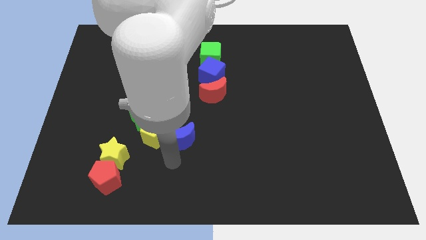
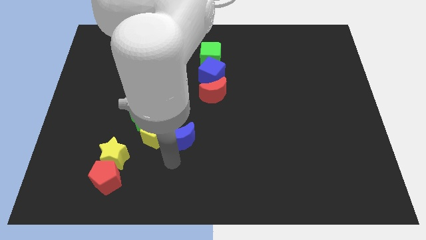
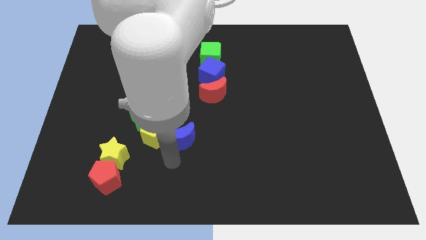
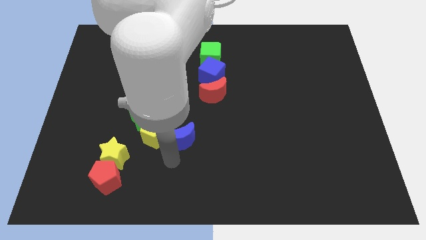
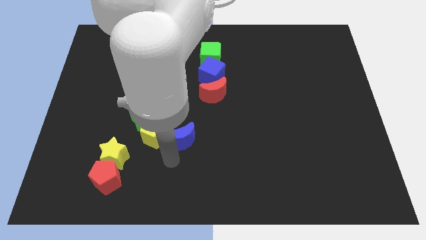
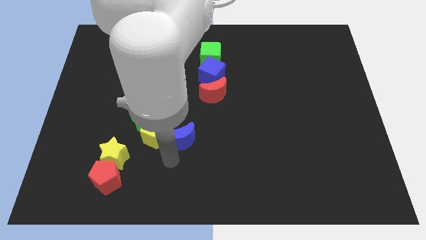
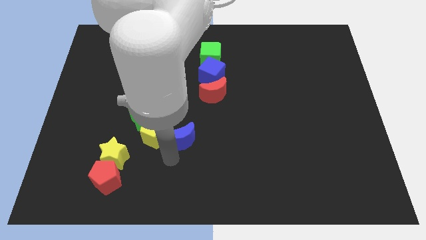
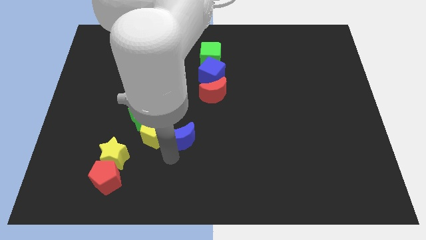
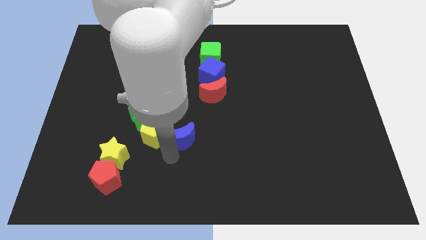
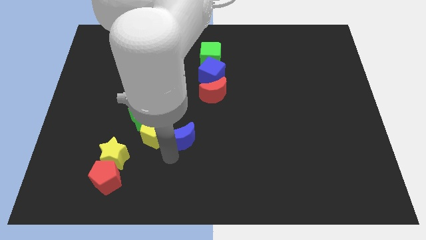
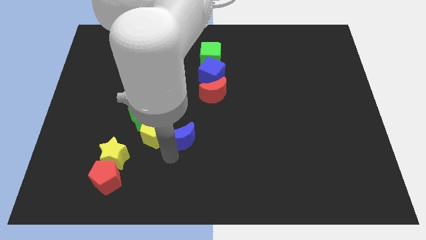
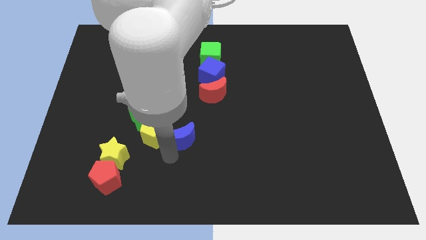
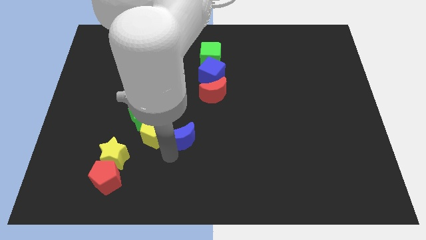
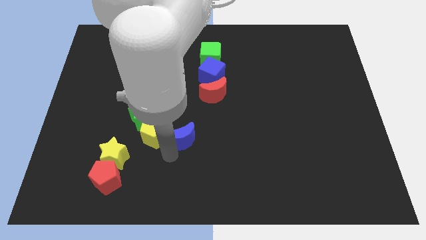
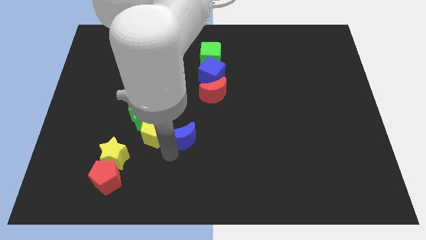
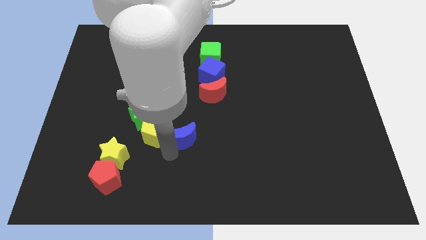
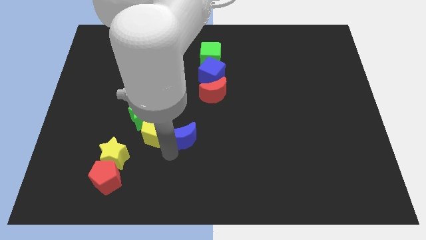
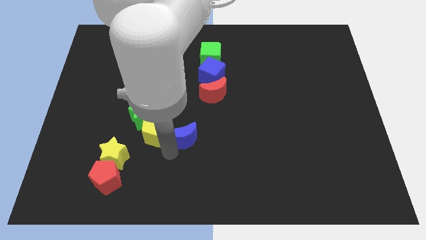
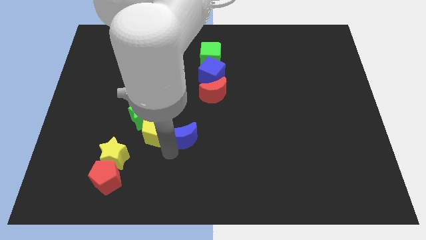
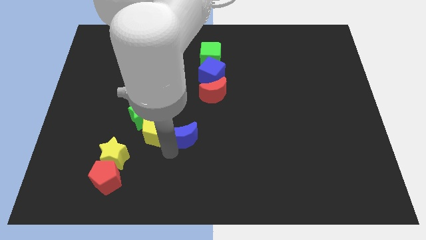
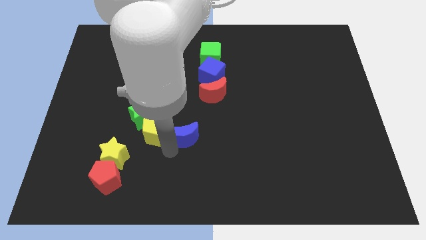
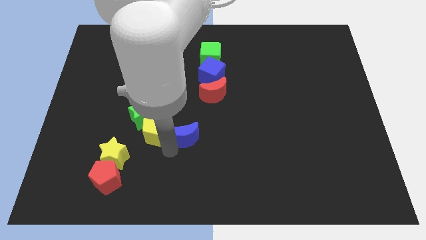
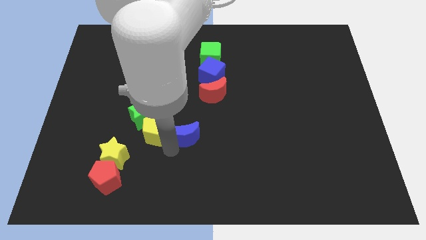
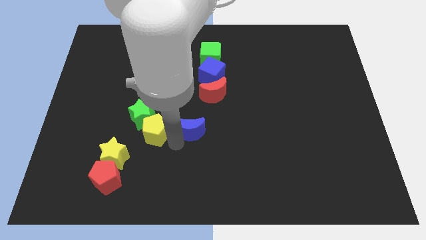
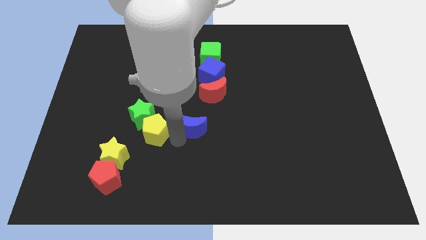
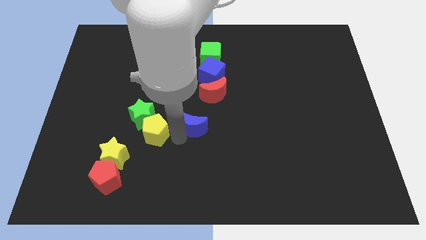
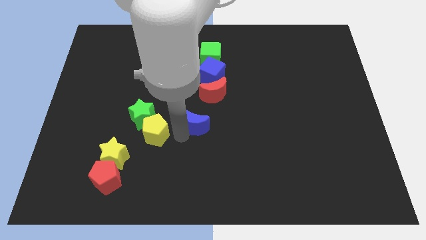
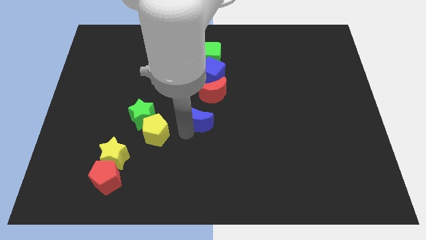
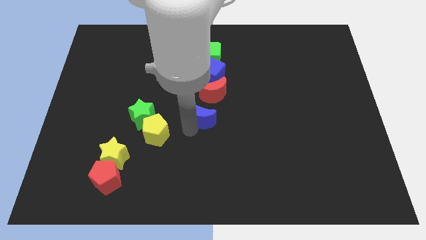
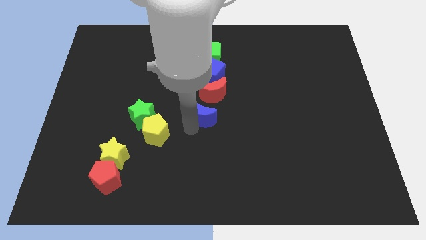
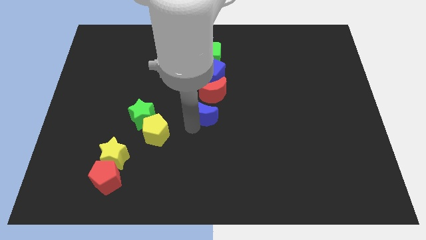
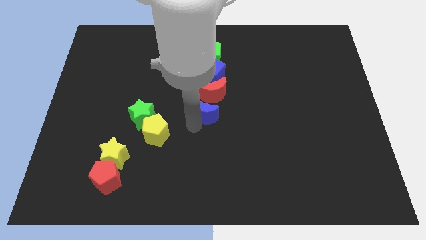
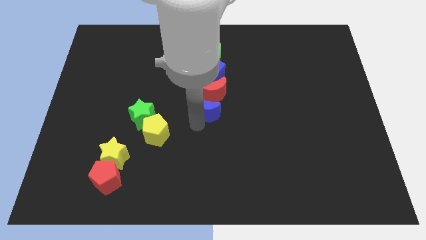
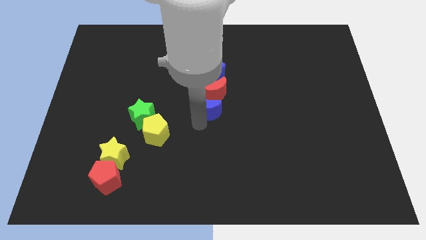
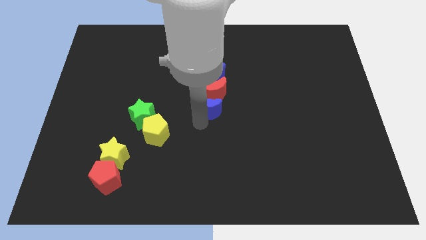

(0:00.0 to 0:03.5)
move the blue crescent to the bottom of the red crescent

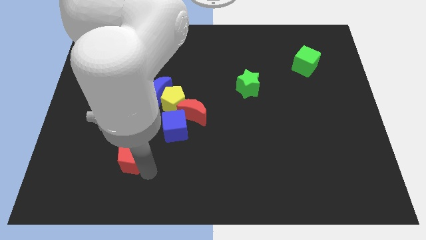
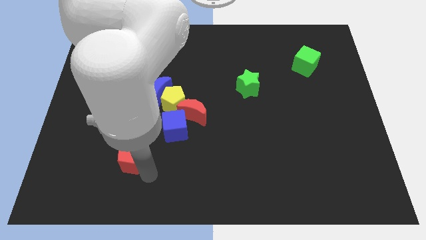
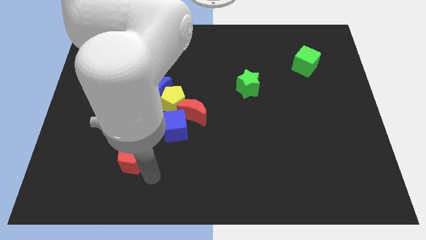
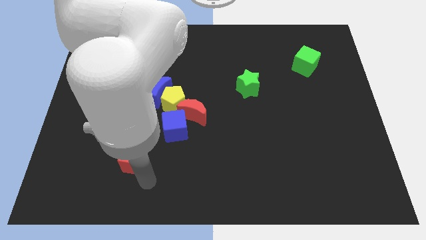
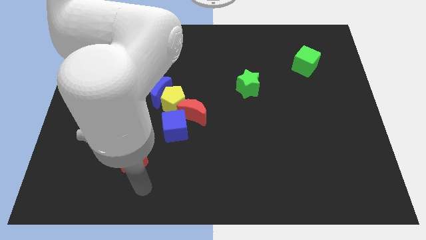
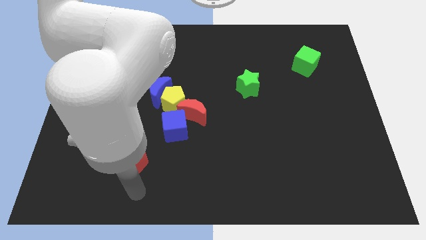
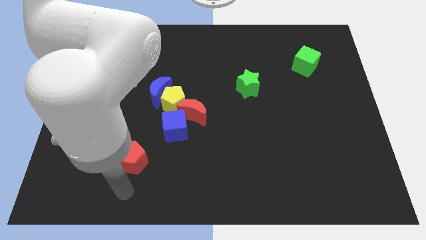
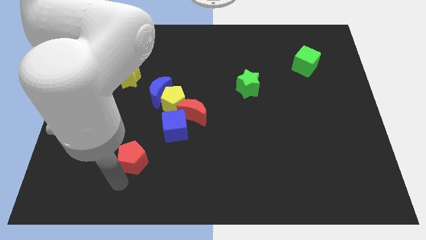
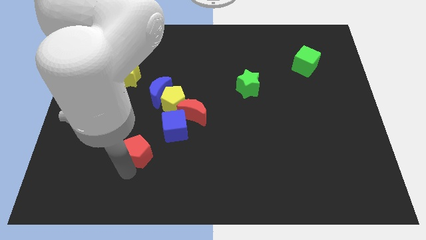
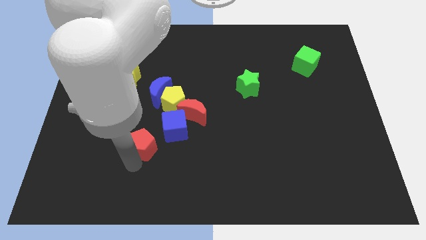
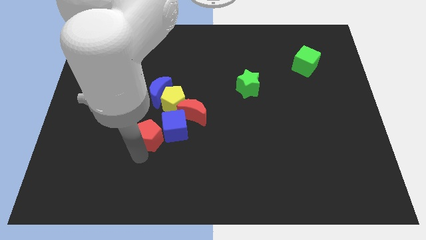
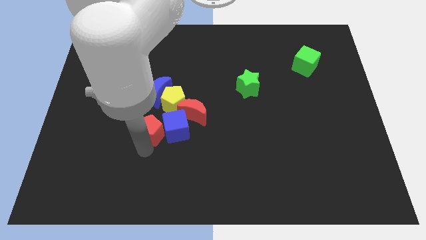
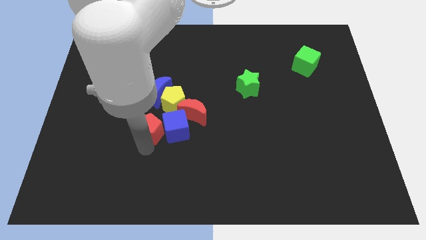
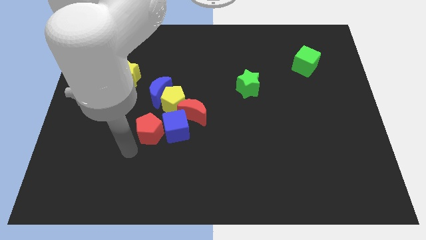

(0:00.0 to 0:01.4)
place red pentagon to the left of the blue cube

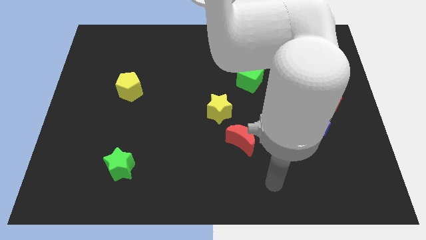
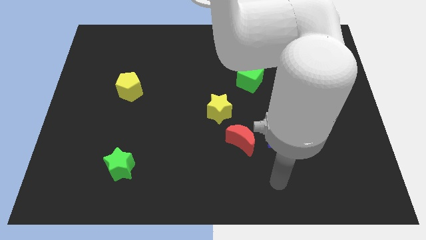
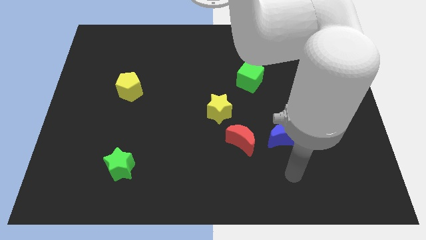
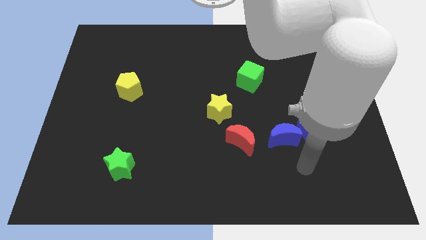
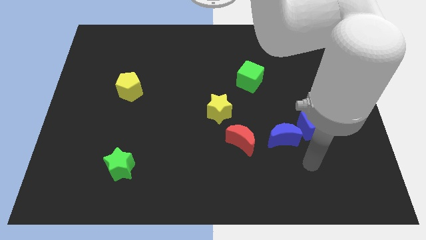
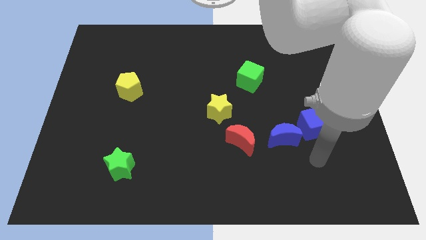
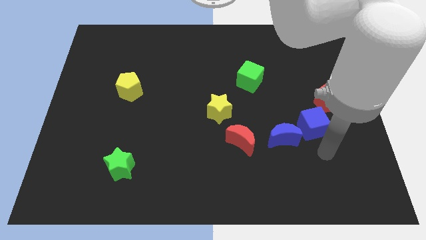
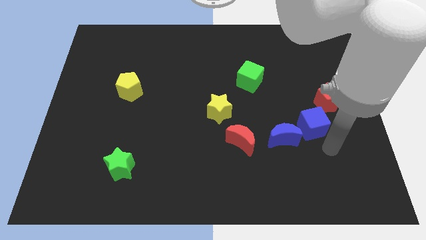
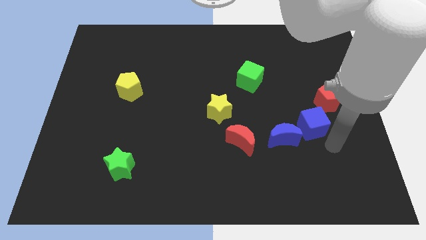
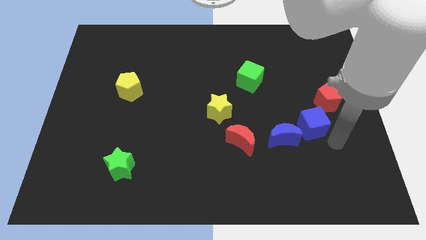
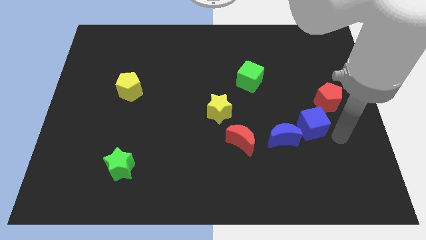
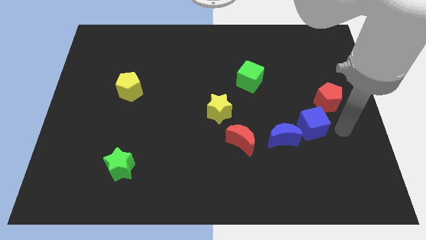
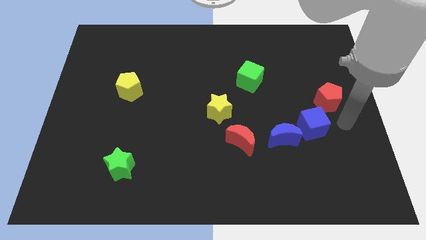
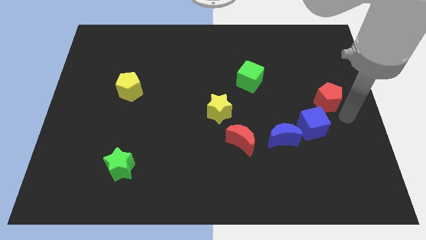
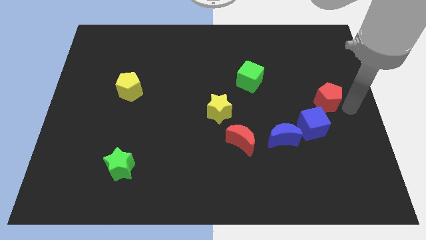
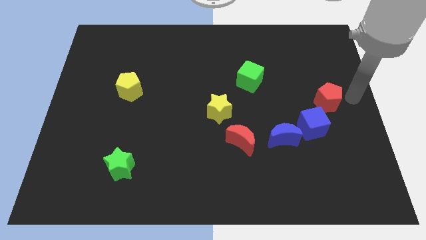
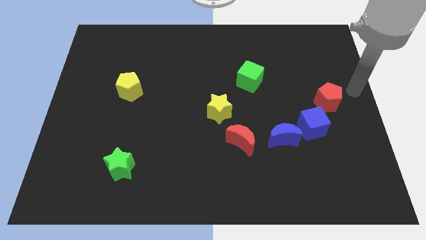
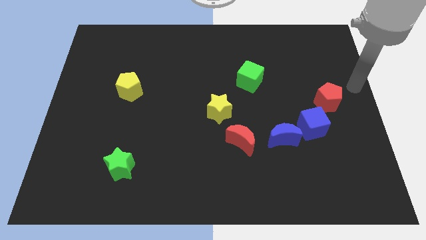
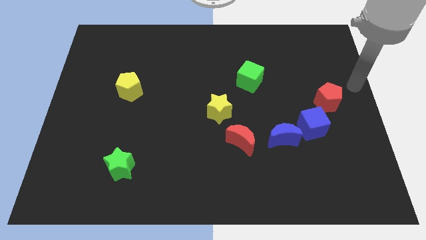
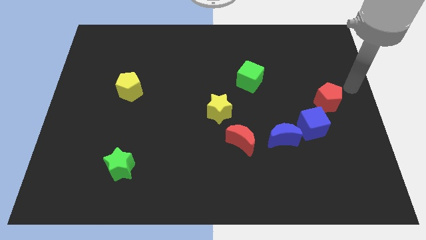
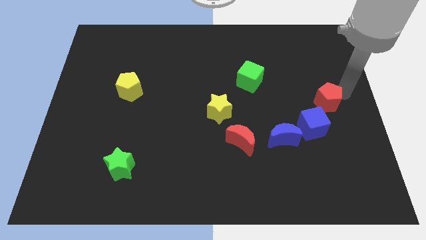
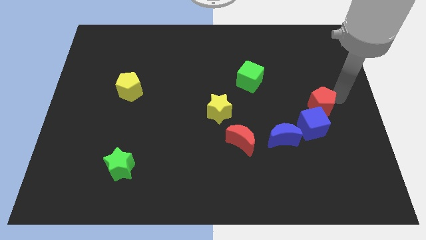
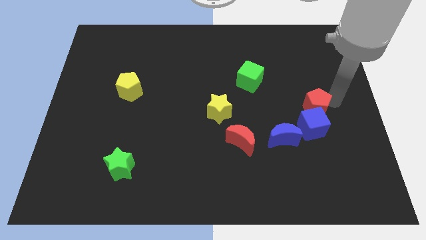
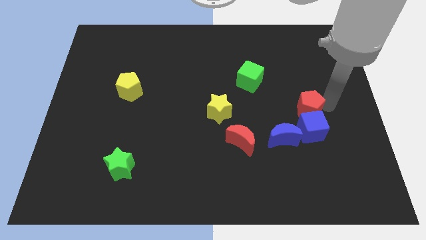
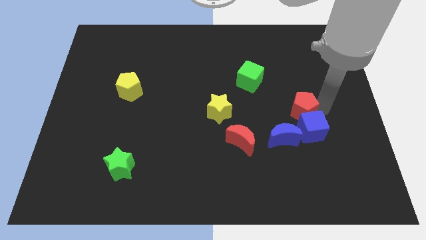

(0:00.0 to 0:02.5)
move the red pentagon into the blue cube

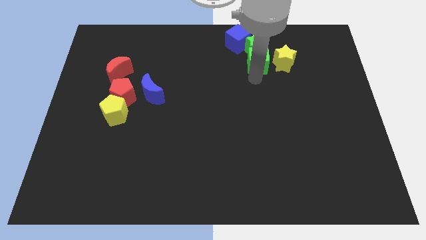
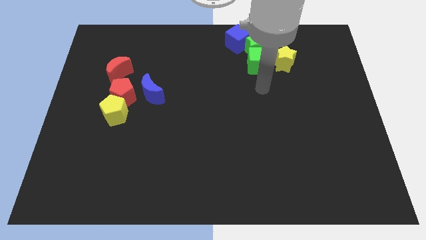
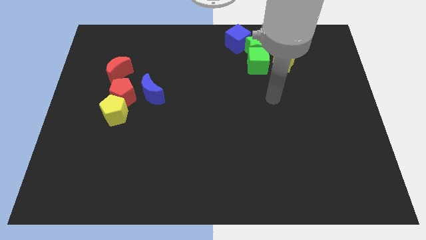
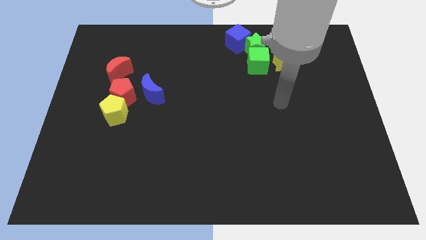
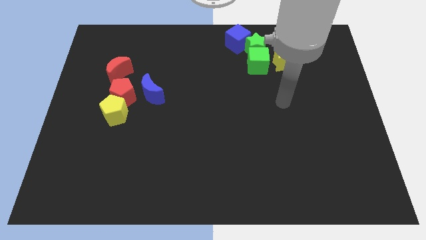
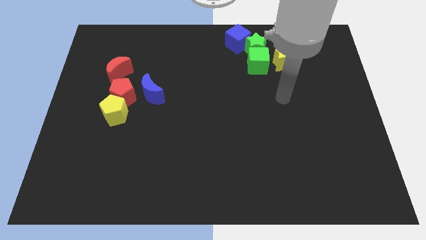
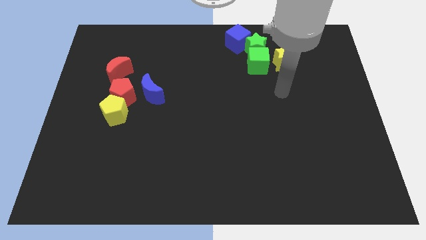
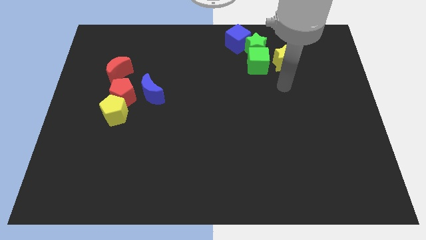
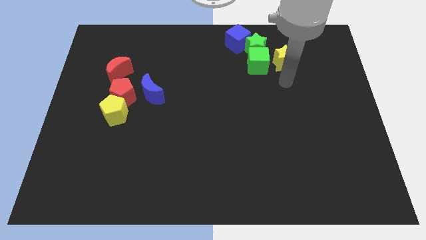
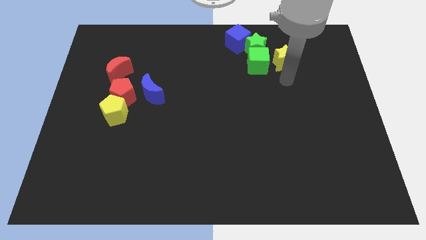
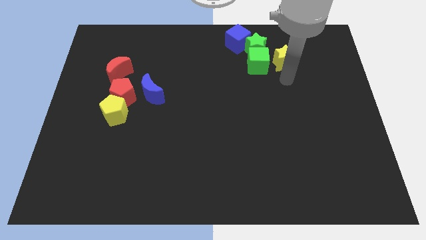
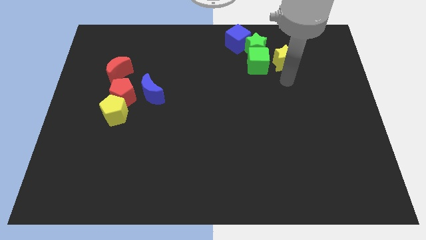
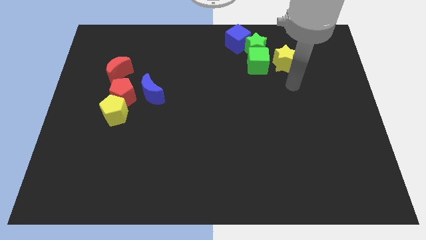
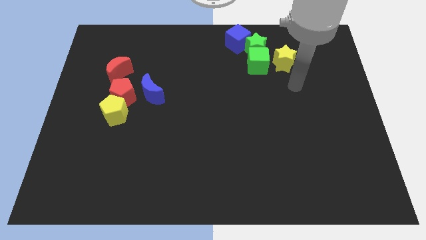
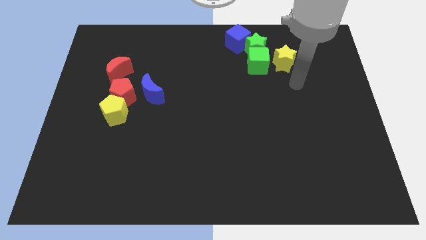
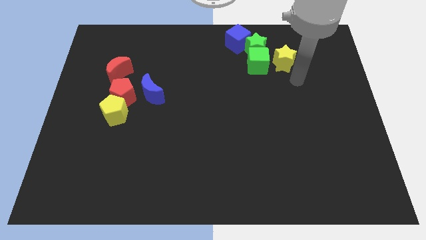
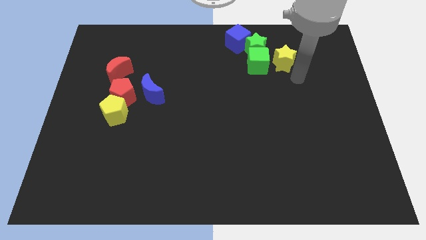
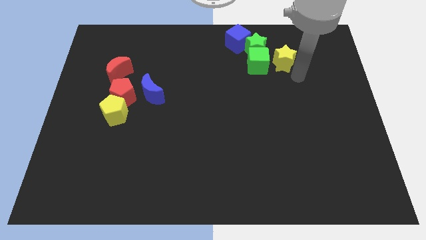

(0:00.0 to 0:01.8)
move your arm towards the yellow star
